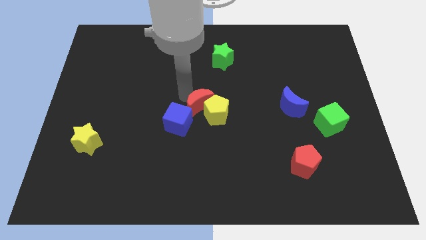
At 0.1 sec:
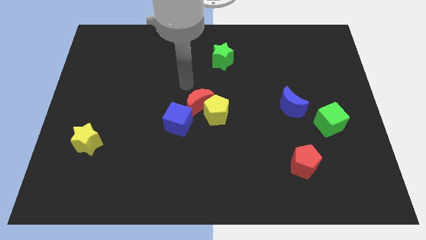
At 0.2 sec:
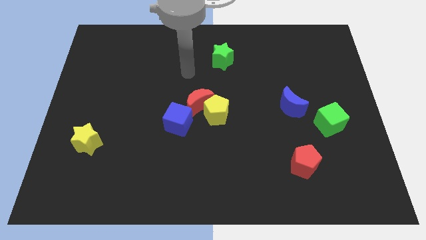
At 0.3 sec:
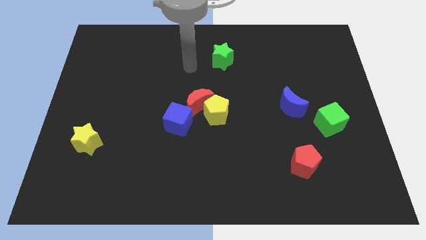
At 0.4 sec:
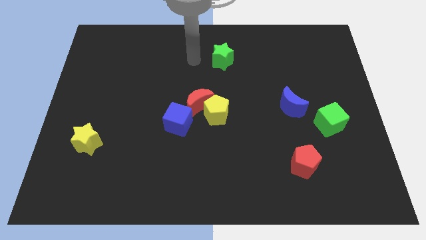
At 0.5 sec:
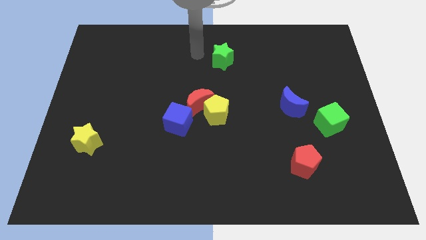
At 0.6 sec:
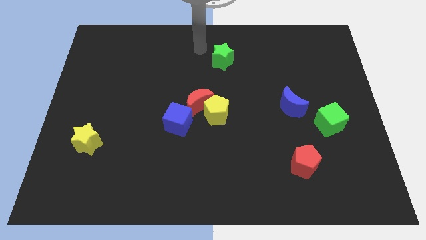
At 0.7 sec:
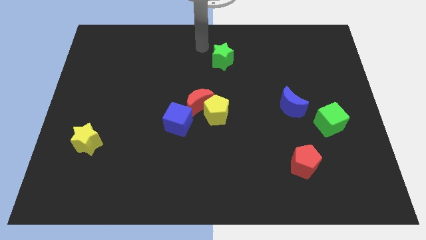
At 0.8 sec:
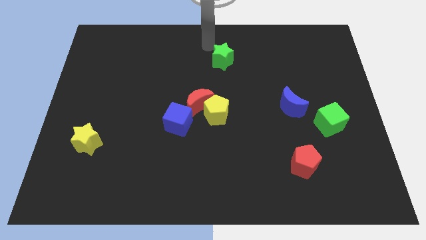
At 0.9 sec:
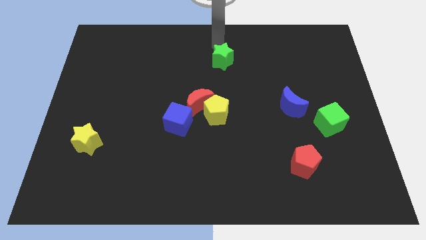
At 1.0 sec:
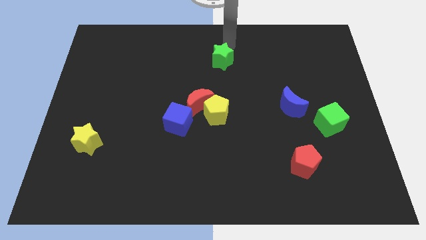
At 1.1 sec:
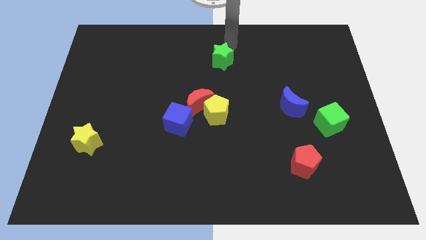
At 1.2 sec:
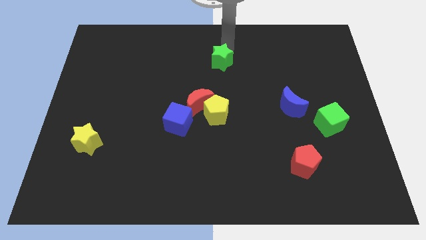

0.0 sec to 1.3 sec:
move your arm towards the top of the green star

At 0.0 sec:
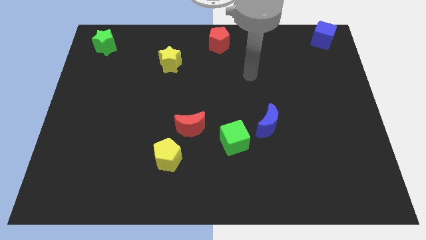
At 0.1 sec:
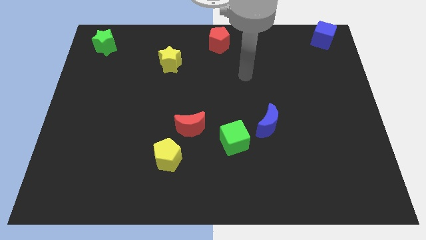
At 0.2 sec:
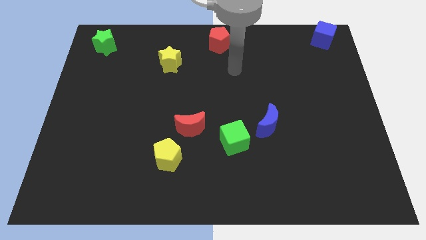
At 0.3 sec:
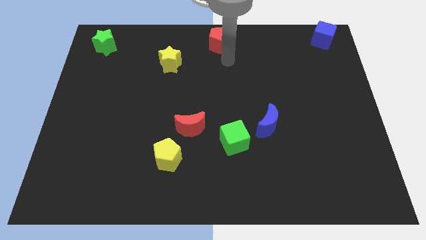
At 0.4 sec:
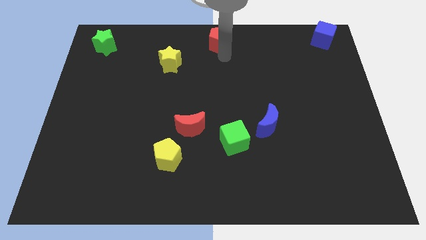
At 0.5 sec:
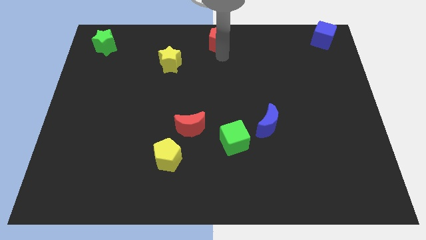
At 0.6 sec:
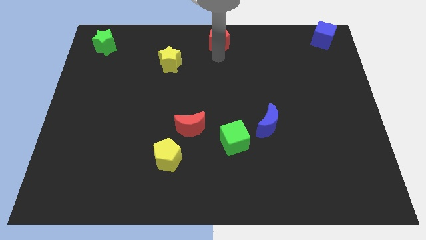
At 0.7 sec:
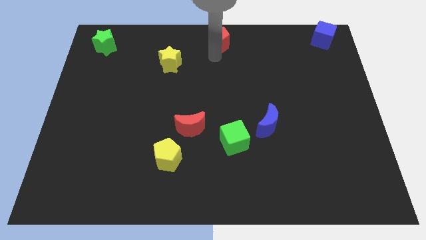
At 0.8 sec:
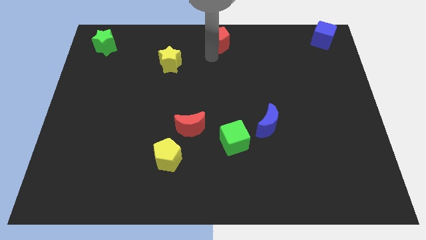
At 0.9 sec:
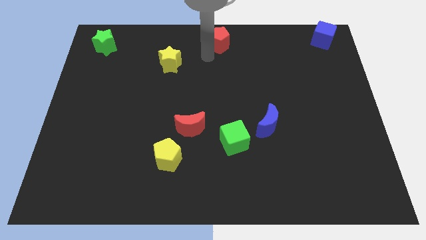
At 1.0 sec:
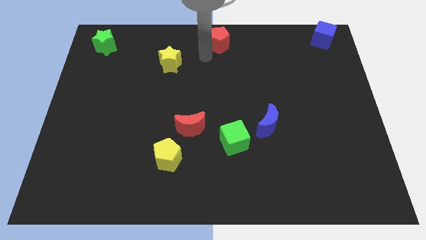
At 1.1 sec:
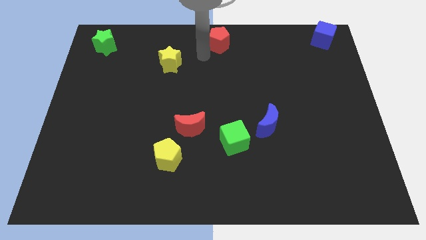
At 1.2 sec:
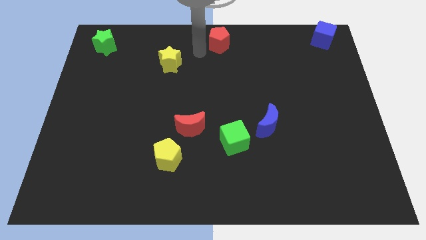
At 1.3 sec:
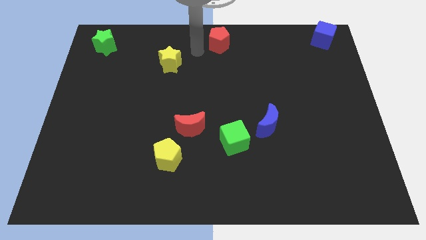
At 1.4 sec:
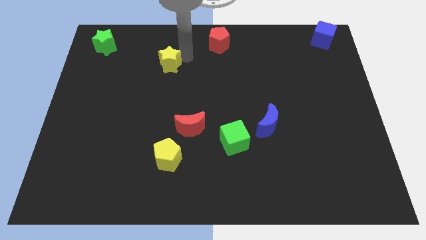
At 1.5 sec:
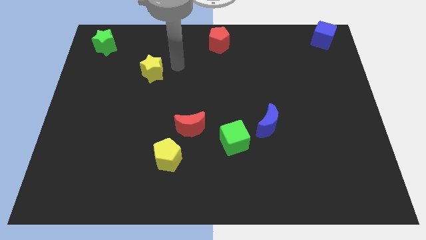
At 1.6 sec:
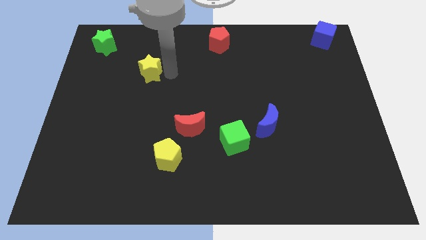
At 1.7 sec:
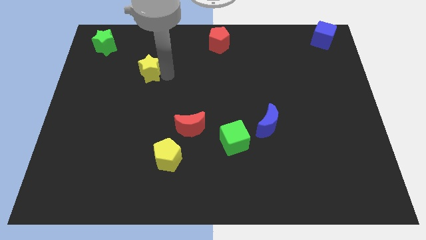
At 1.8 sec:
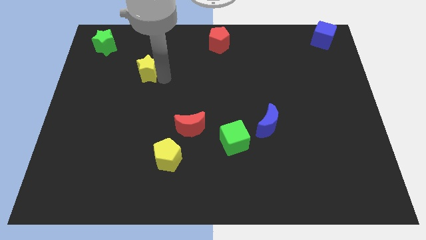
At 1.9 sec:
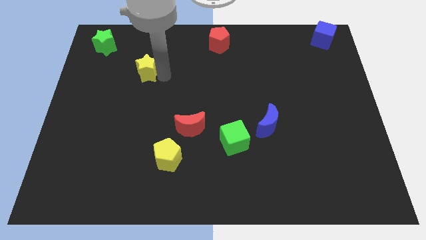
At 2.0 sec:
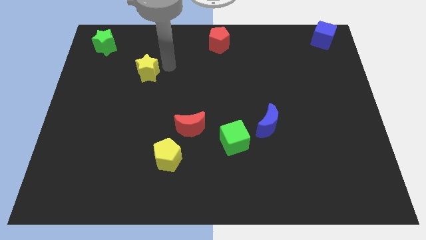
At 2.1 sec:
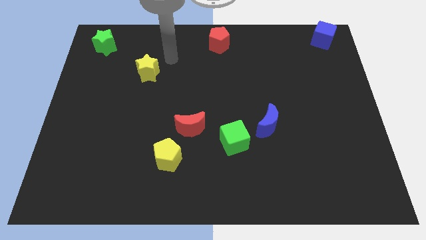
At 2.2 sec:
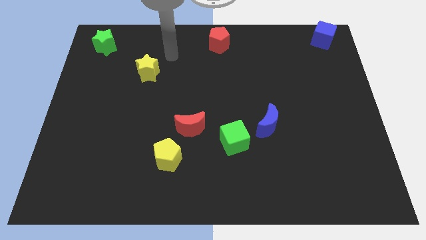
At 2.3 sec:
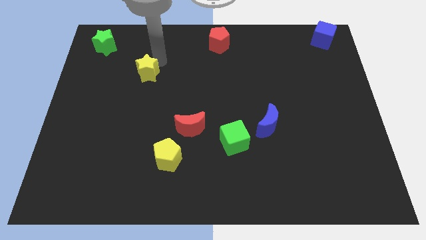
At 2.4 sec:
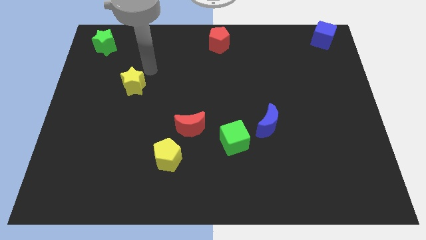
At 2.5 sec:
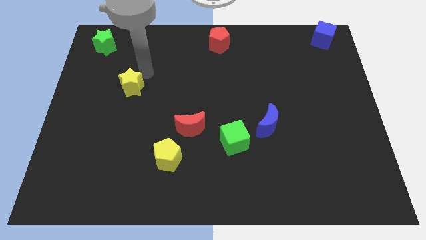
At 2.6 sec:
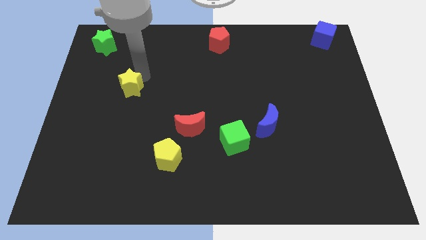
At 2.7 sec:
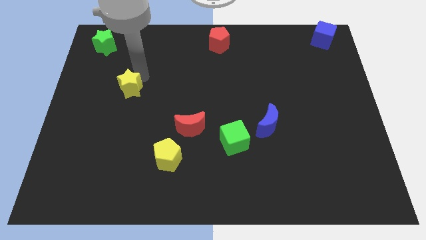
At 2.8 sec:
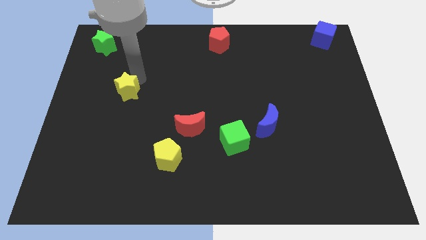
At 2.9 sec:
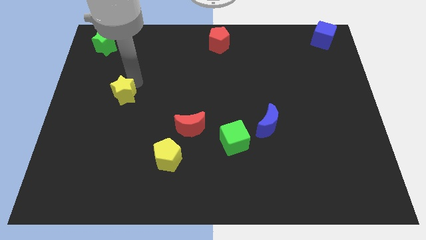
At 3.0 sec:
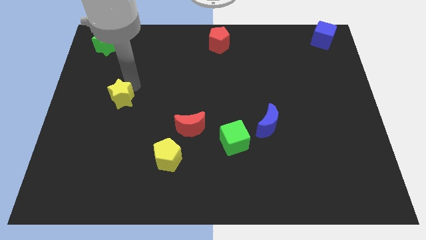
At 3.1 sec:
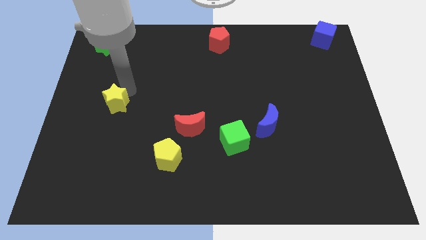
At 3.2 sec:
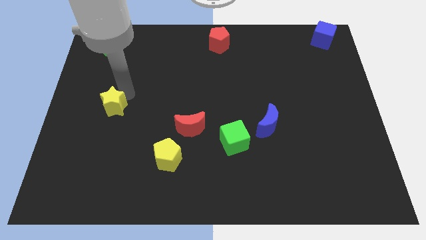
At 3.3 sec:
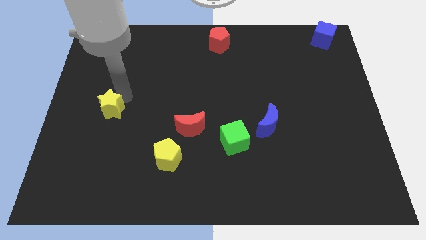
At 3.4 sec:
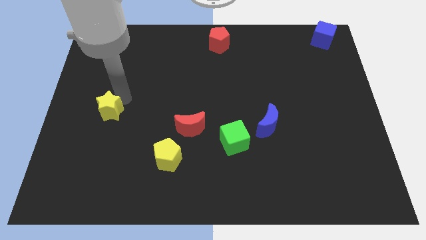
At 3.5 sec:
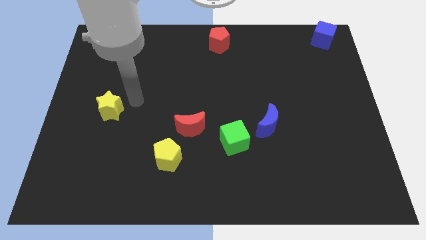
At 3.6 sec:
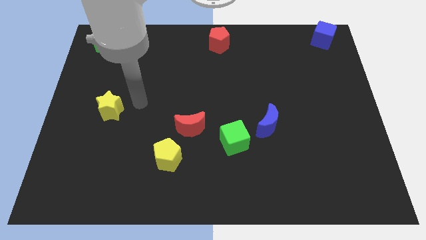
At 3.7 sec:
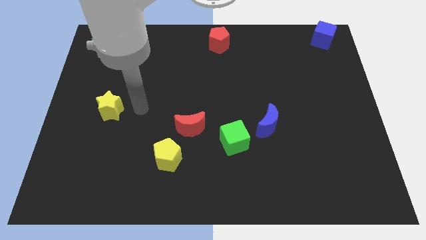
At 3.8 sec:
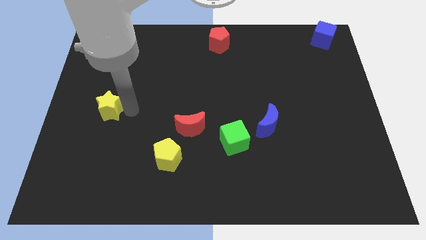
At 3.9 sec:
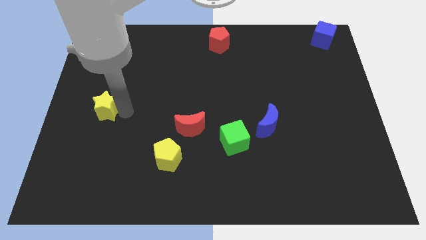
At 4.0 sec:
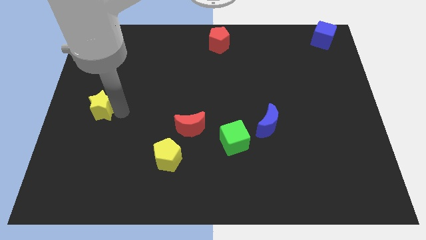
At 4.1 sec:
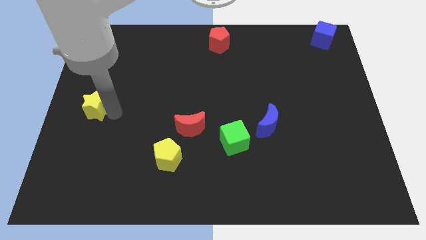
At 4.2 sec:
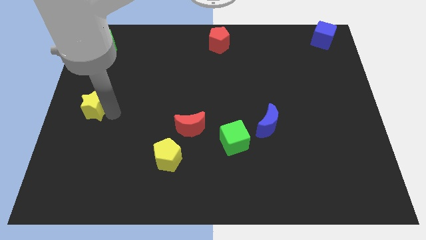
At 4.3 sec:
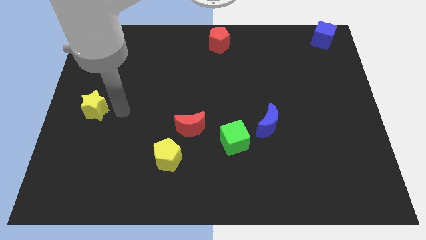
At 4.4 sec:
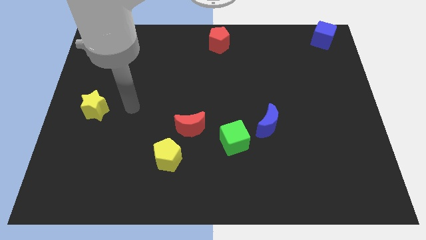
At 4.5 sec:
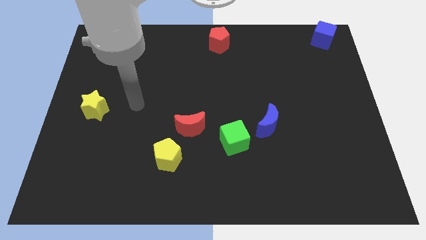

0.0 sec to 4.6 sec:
move the yellow star towards the center left side of the board

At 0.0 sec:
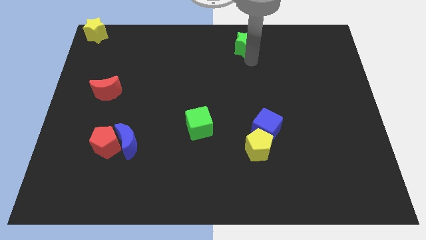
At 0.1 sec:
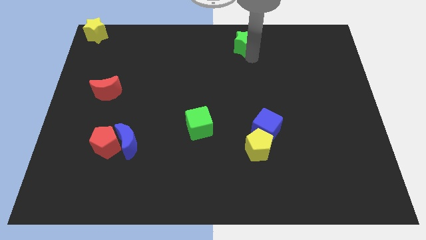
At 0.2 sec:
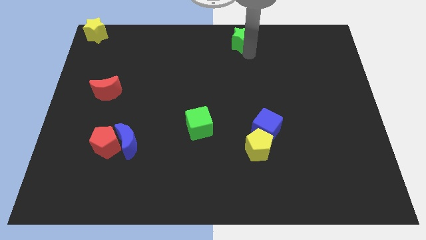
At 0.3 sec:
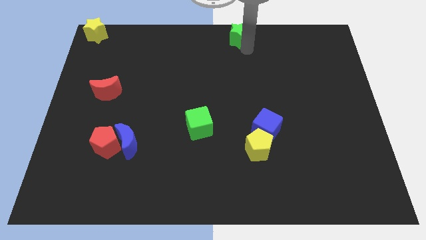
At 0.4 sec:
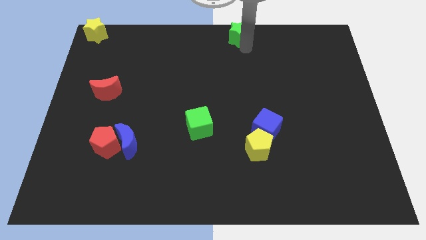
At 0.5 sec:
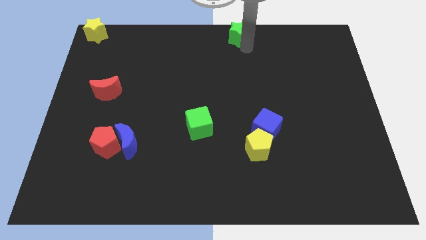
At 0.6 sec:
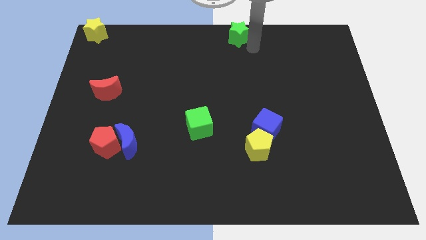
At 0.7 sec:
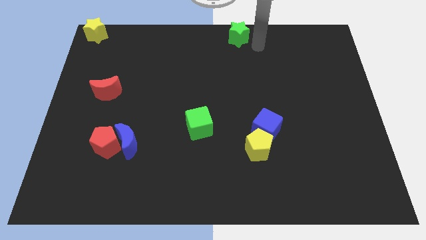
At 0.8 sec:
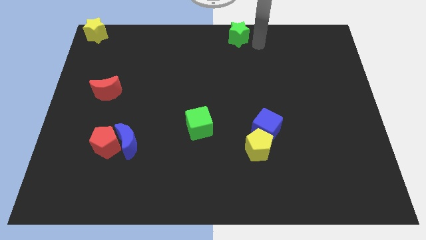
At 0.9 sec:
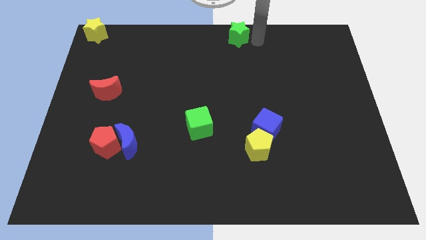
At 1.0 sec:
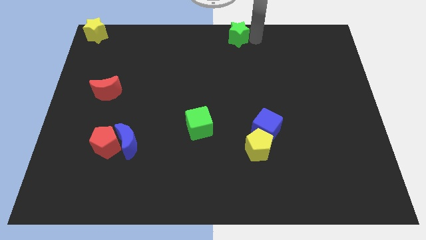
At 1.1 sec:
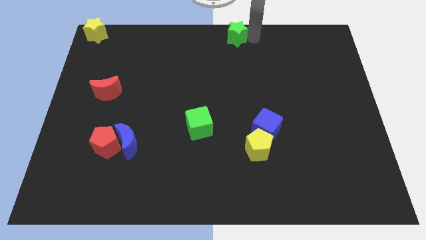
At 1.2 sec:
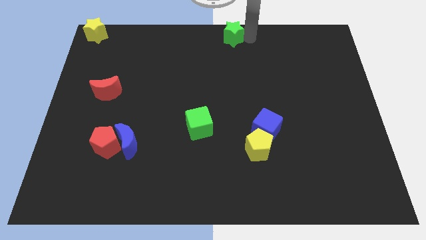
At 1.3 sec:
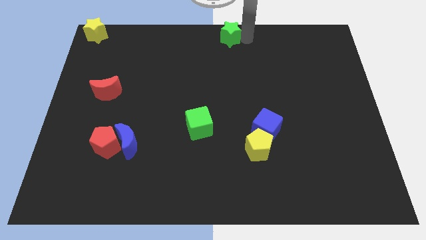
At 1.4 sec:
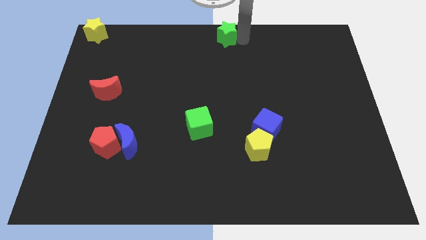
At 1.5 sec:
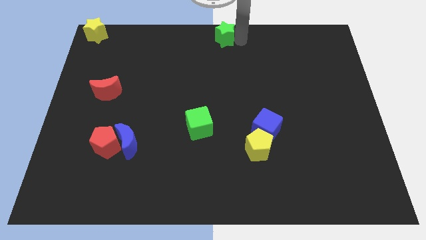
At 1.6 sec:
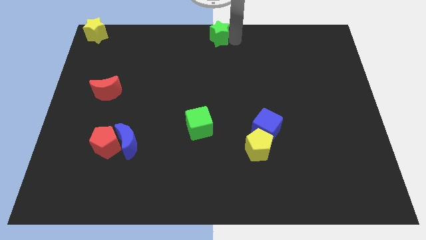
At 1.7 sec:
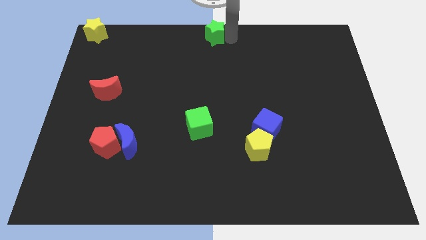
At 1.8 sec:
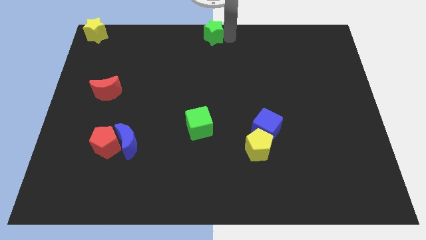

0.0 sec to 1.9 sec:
place the green star at the top center of the board

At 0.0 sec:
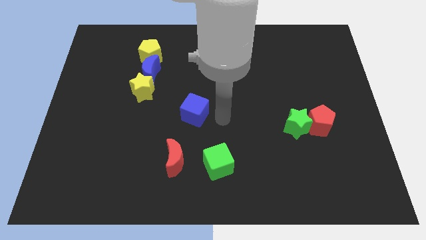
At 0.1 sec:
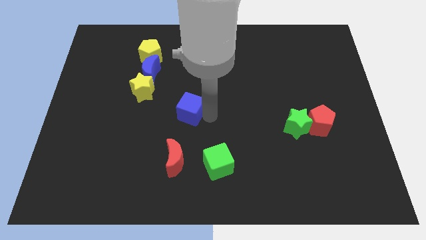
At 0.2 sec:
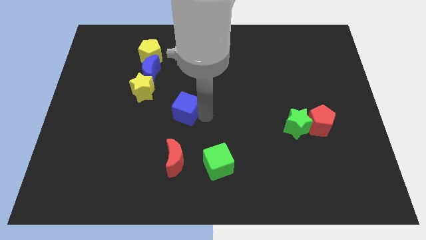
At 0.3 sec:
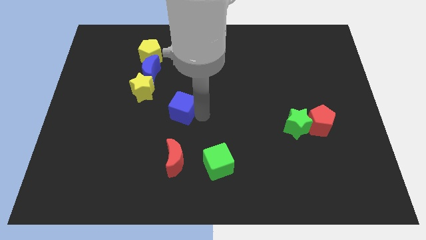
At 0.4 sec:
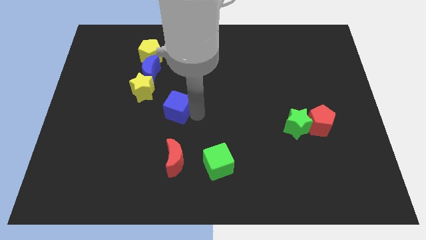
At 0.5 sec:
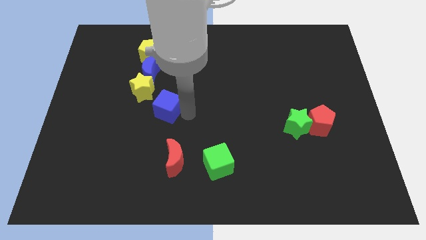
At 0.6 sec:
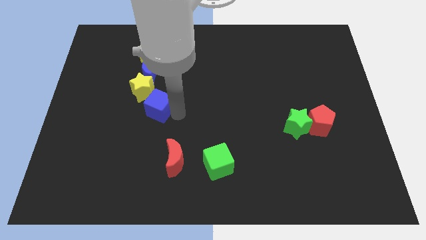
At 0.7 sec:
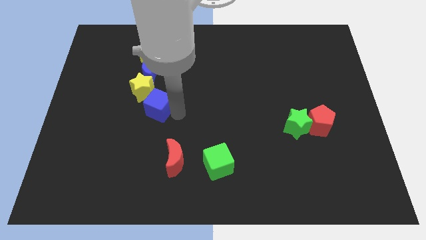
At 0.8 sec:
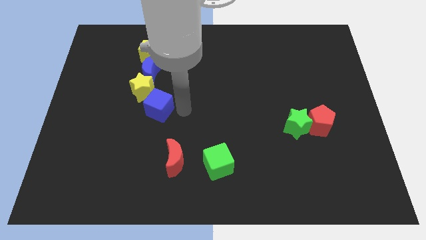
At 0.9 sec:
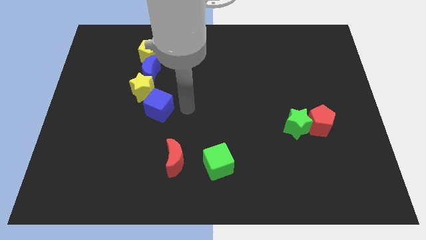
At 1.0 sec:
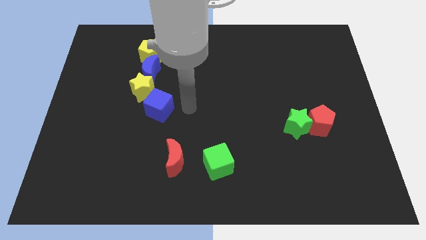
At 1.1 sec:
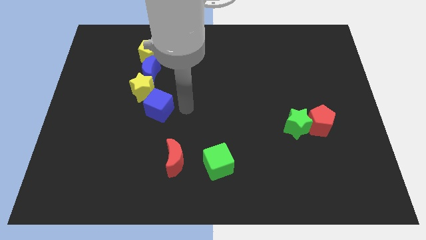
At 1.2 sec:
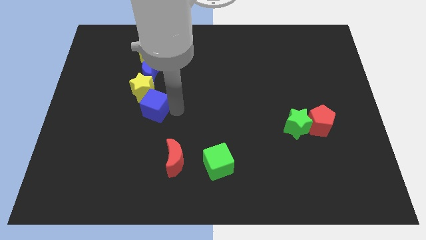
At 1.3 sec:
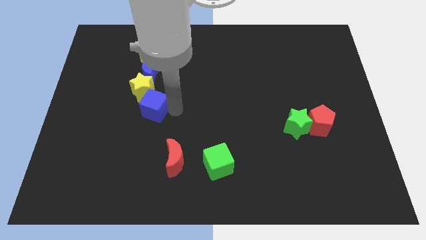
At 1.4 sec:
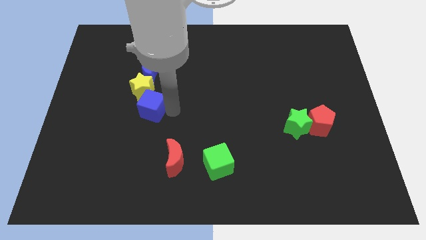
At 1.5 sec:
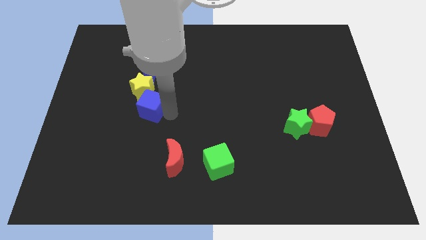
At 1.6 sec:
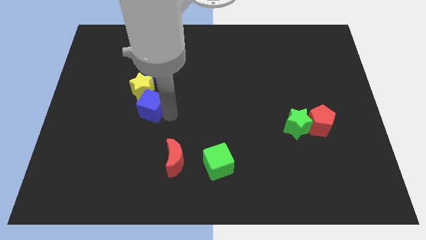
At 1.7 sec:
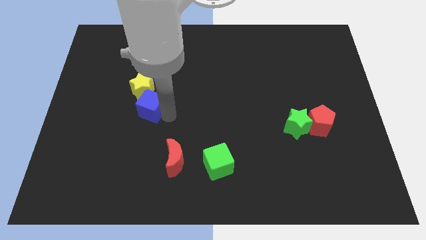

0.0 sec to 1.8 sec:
move the blue cube below the yellow star
